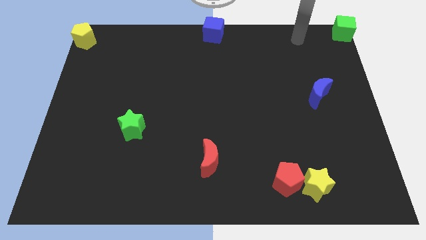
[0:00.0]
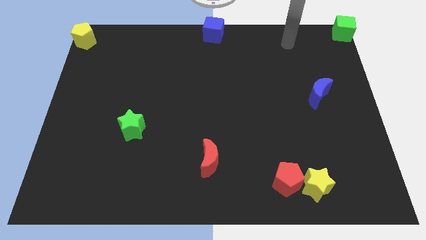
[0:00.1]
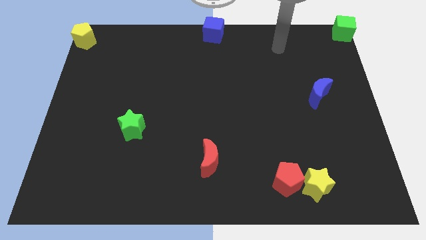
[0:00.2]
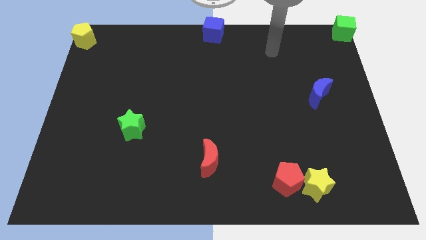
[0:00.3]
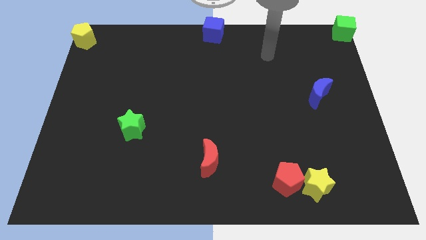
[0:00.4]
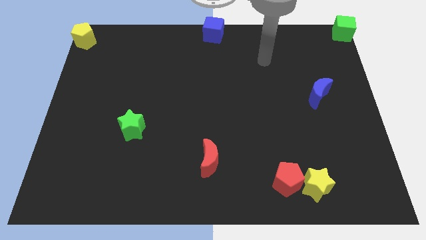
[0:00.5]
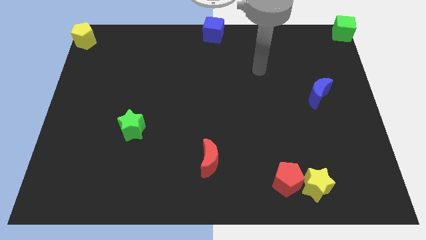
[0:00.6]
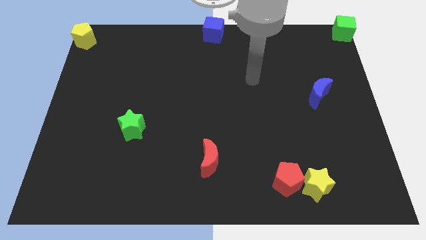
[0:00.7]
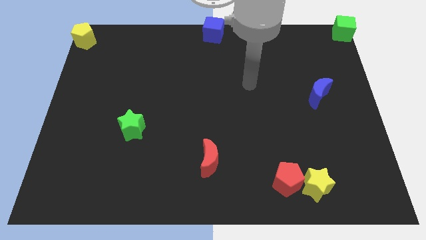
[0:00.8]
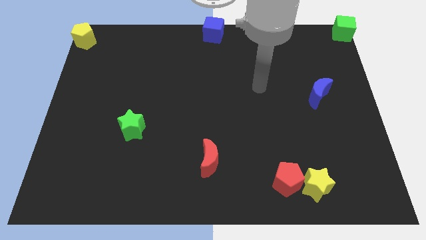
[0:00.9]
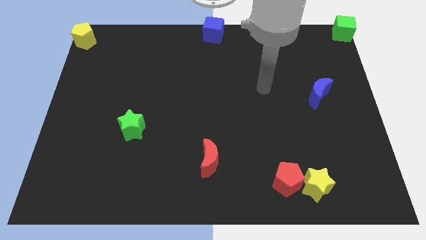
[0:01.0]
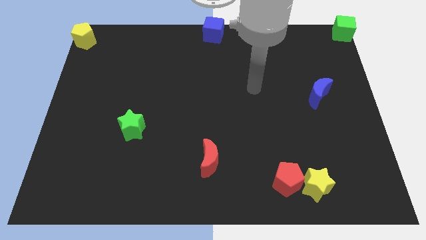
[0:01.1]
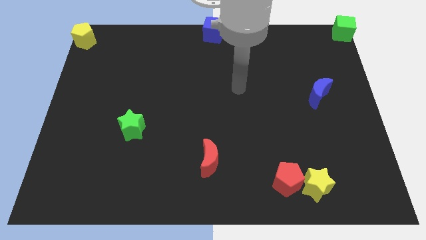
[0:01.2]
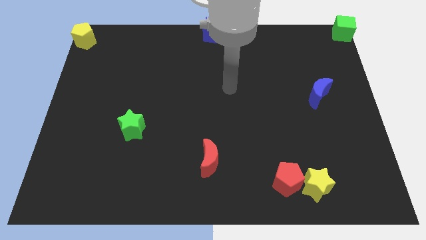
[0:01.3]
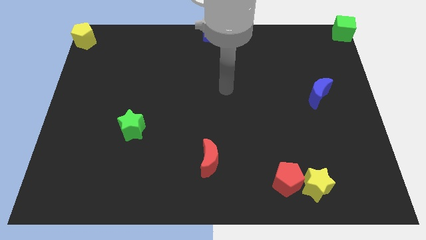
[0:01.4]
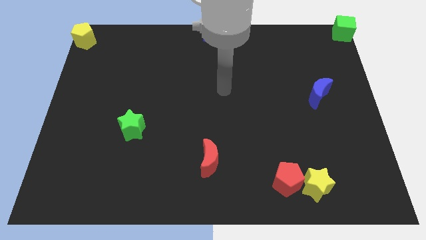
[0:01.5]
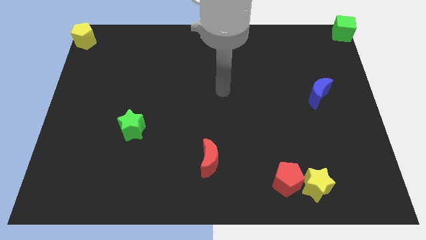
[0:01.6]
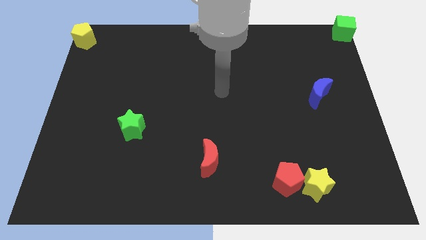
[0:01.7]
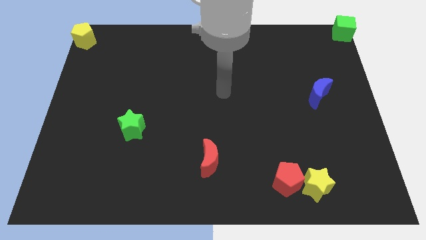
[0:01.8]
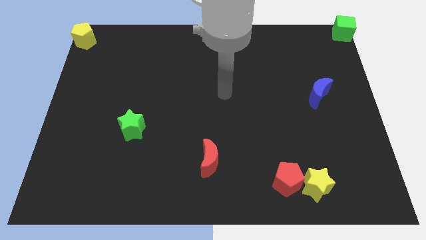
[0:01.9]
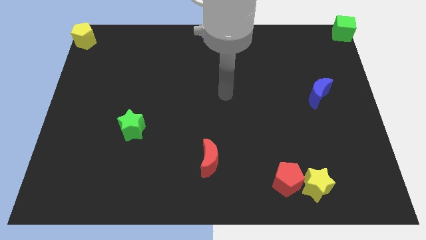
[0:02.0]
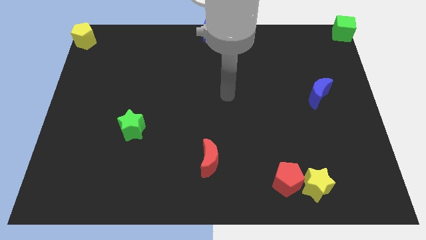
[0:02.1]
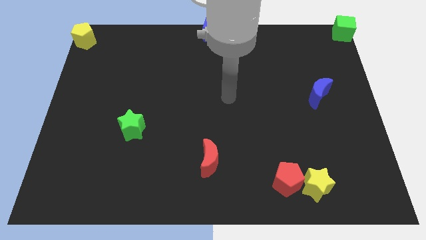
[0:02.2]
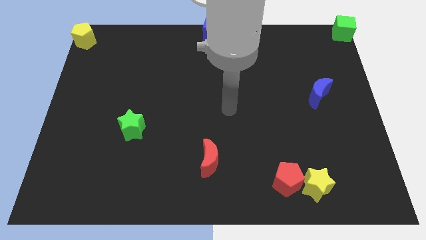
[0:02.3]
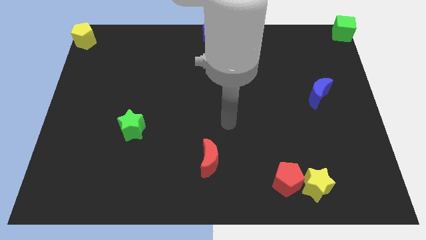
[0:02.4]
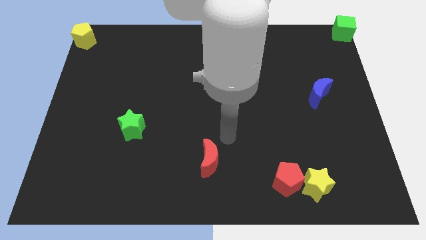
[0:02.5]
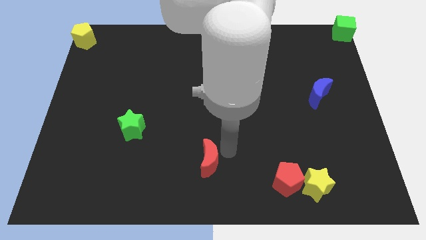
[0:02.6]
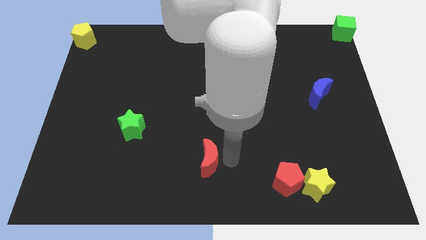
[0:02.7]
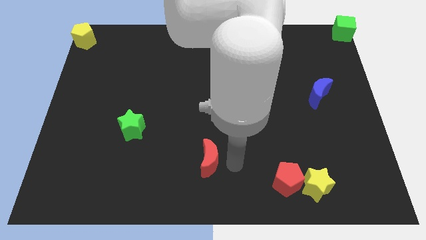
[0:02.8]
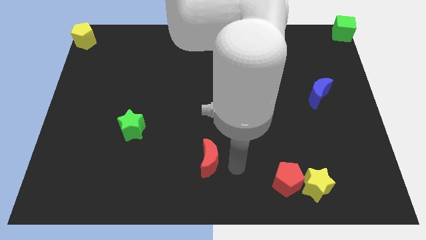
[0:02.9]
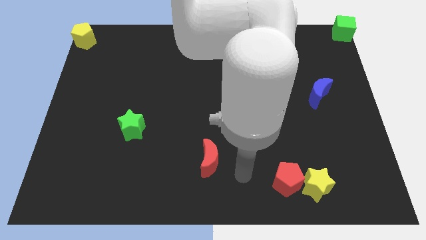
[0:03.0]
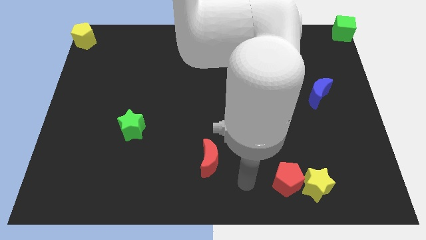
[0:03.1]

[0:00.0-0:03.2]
place your hand in between the red crescent and red pentagon

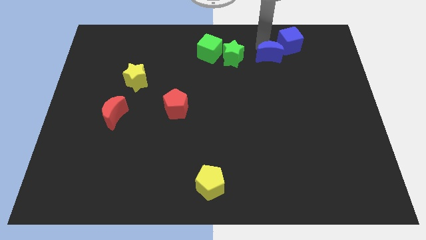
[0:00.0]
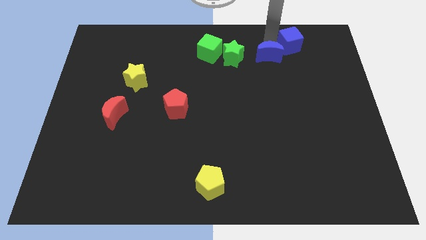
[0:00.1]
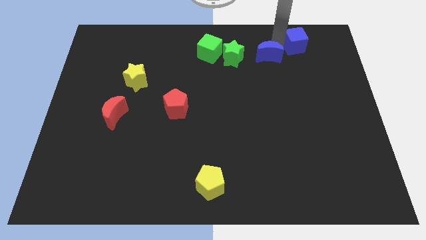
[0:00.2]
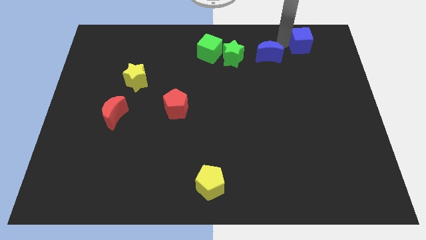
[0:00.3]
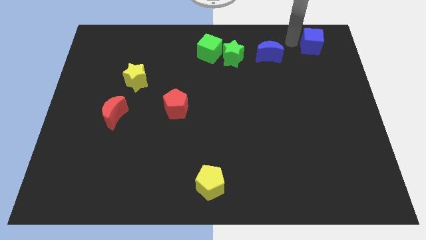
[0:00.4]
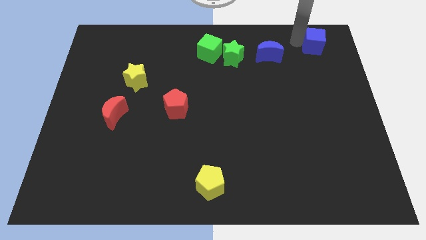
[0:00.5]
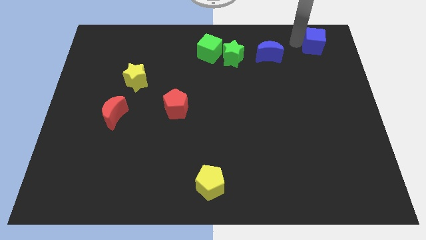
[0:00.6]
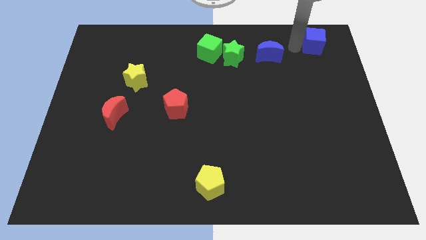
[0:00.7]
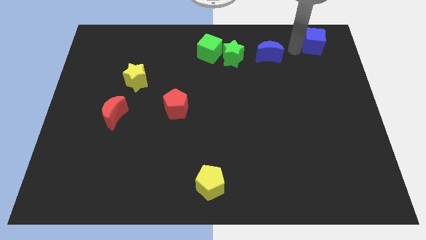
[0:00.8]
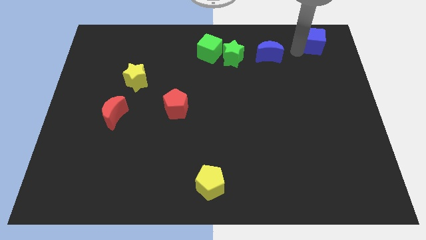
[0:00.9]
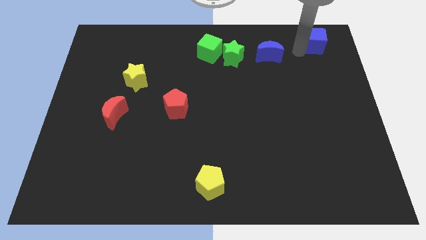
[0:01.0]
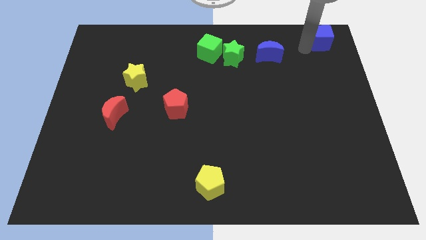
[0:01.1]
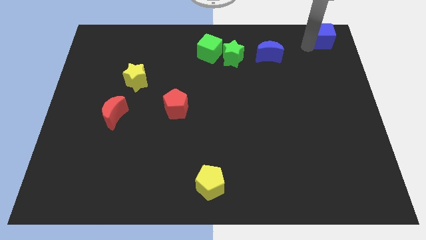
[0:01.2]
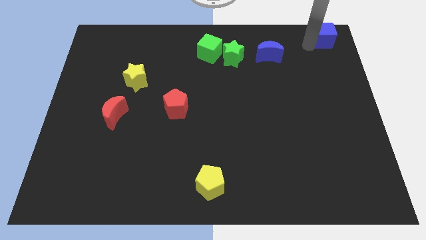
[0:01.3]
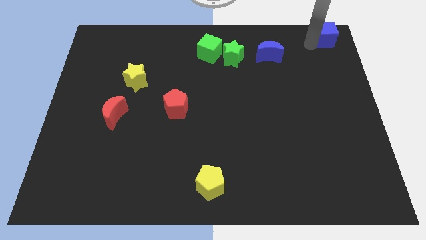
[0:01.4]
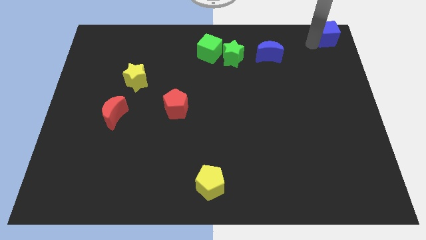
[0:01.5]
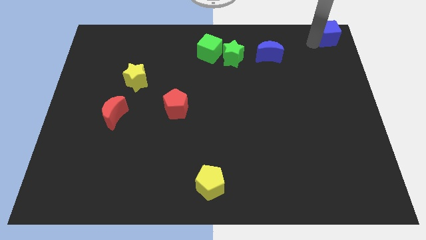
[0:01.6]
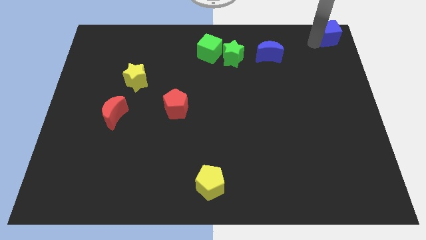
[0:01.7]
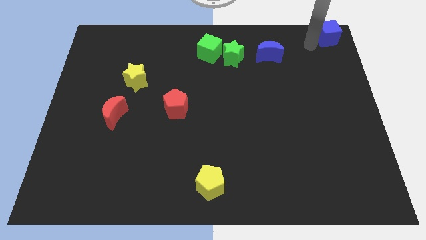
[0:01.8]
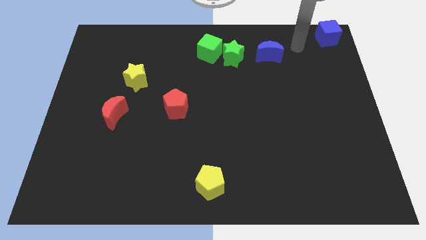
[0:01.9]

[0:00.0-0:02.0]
move blue cube away from the blue moon

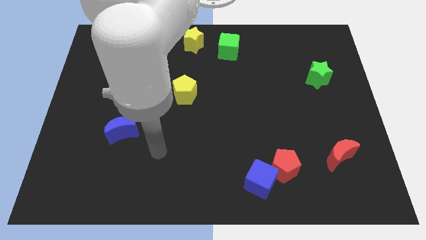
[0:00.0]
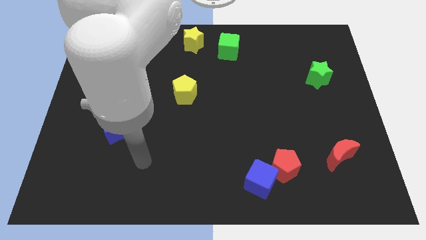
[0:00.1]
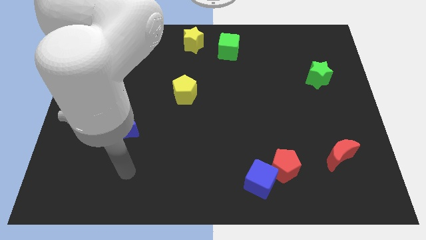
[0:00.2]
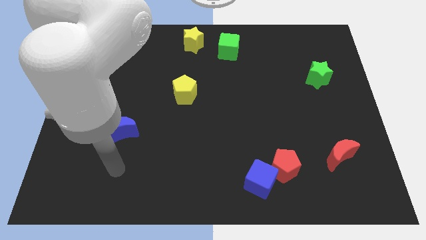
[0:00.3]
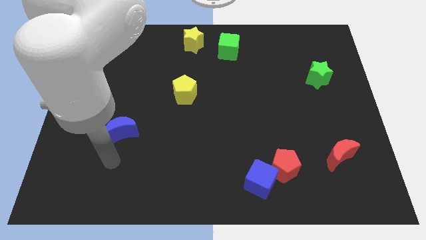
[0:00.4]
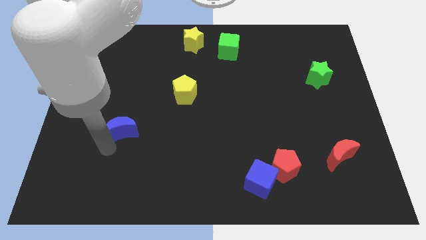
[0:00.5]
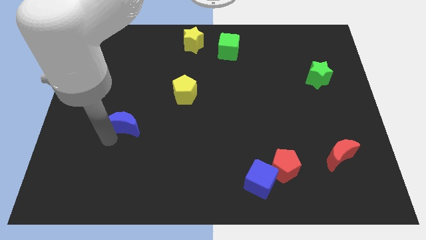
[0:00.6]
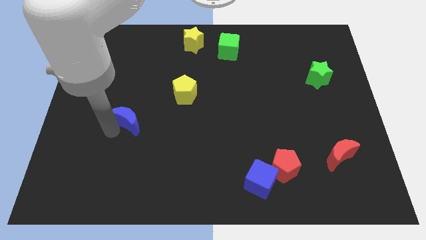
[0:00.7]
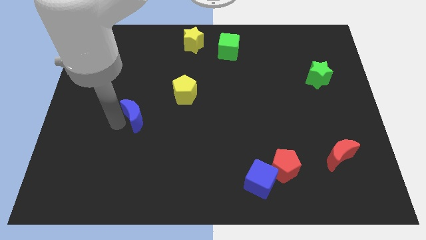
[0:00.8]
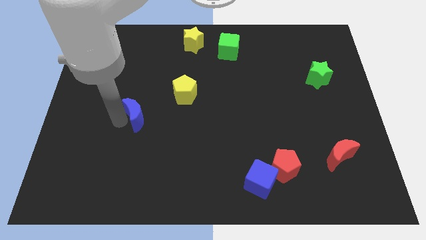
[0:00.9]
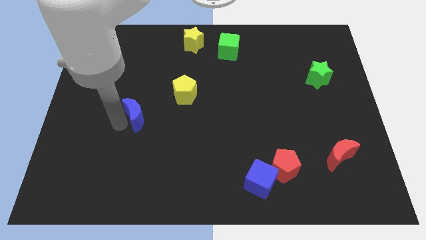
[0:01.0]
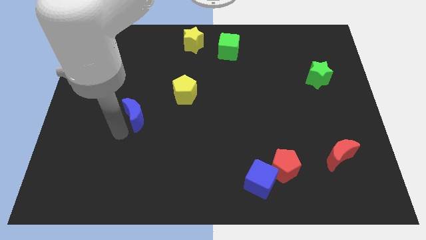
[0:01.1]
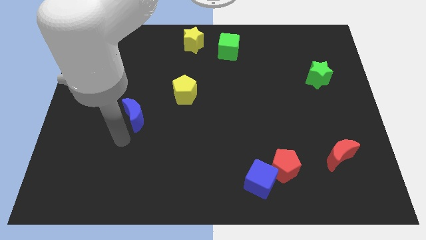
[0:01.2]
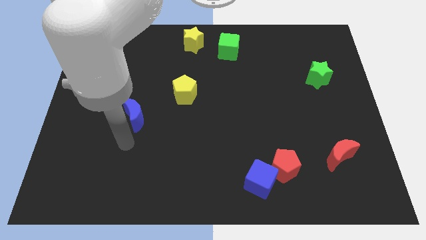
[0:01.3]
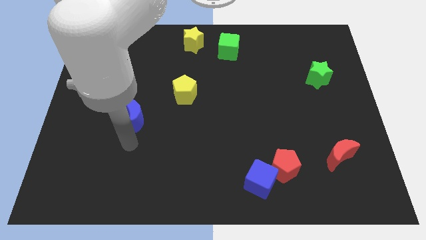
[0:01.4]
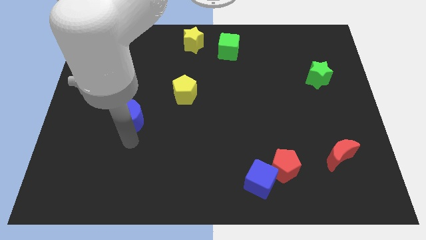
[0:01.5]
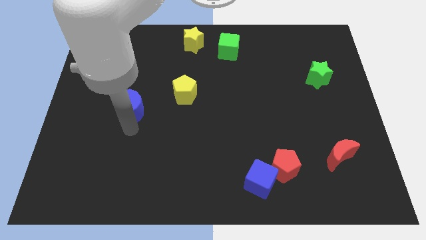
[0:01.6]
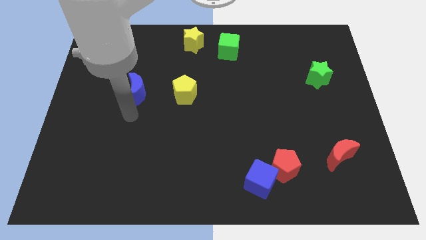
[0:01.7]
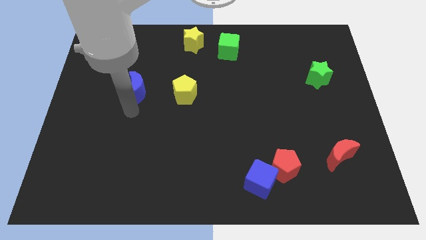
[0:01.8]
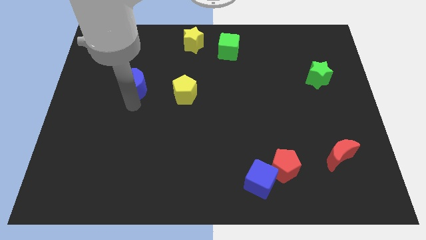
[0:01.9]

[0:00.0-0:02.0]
push the blue moon to the left of the yellow pentagon

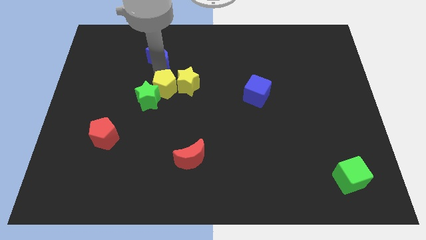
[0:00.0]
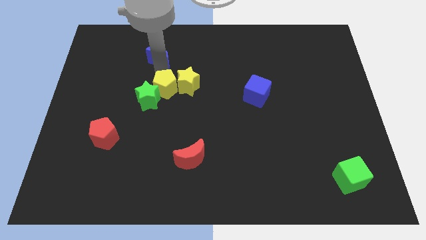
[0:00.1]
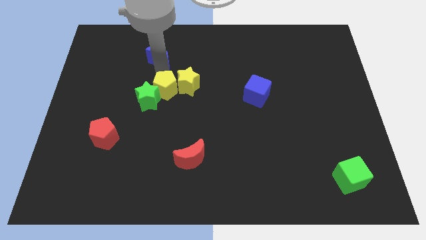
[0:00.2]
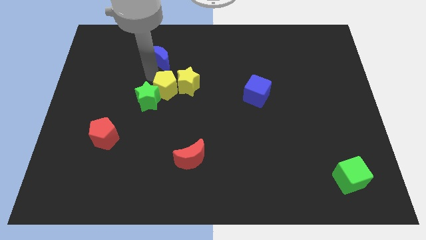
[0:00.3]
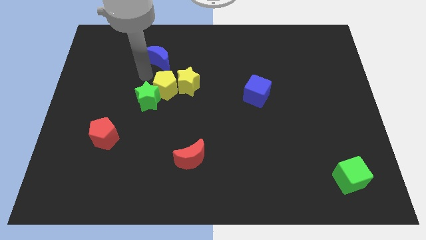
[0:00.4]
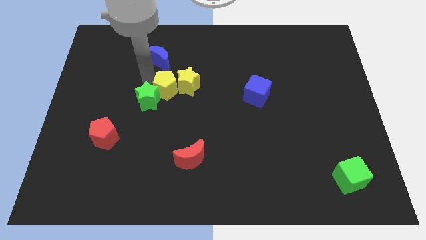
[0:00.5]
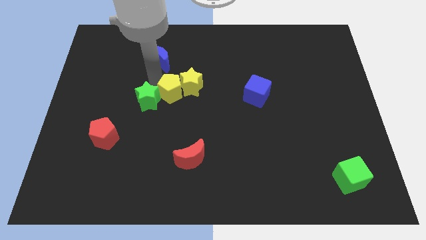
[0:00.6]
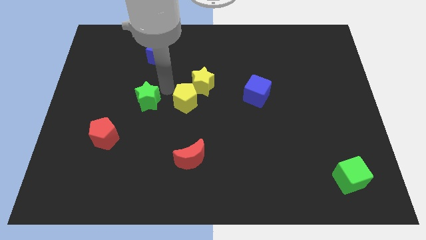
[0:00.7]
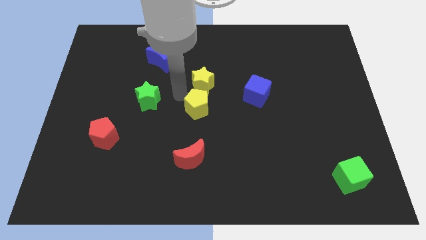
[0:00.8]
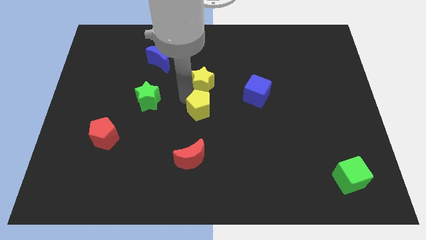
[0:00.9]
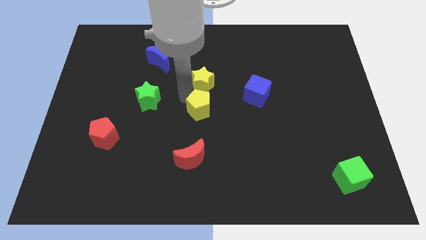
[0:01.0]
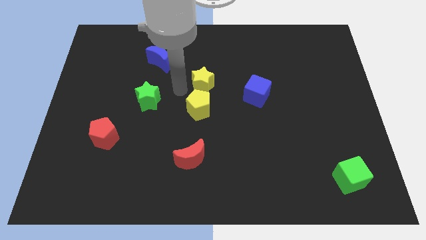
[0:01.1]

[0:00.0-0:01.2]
push the yellow pentagon bottom of the yellow star

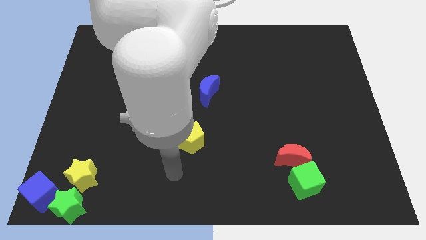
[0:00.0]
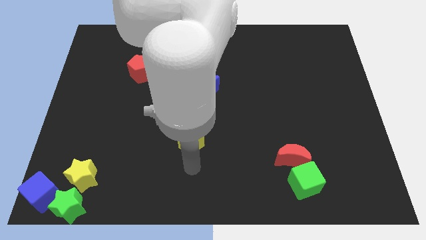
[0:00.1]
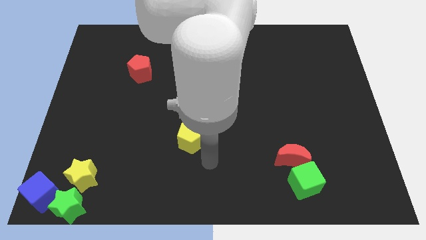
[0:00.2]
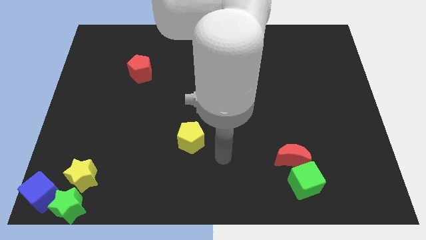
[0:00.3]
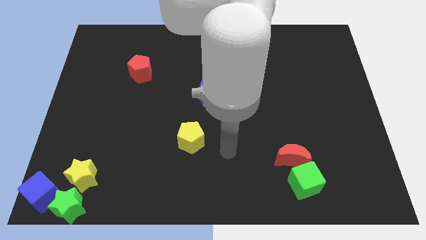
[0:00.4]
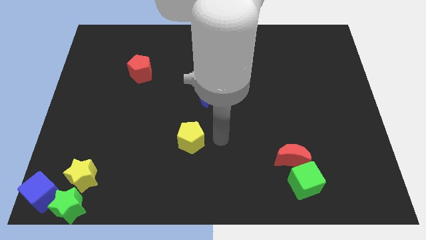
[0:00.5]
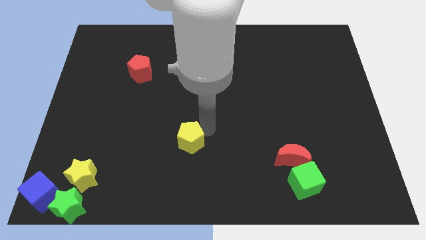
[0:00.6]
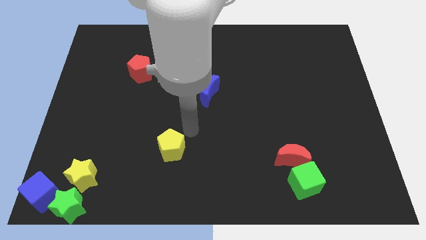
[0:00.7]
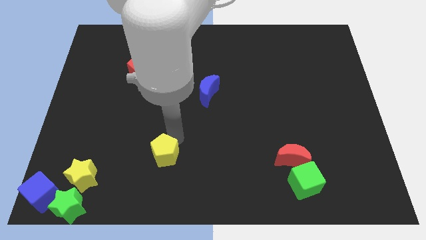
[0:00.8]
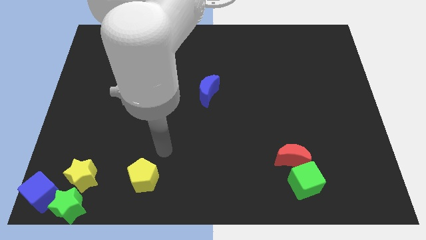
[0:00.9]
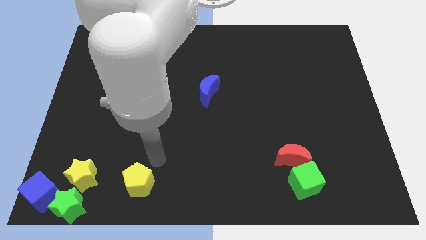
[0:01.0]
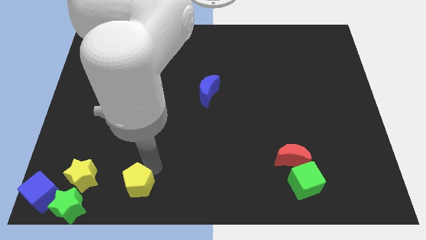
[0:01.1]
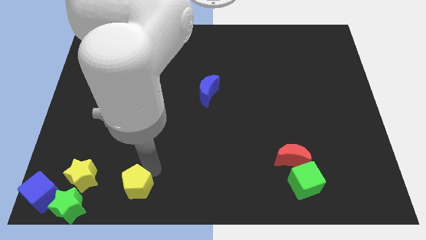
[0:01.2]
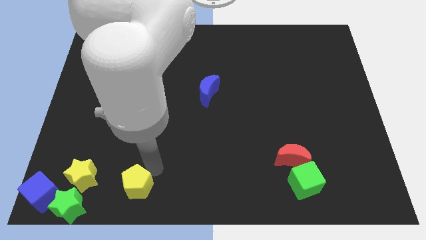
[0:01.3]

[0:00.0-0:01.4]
push the yellow pentagon to the right of the yellow star
